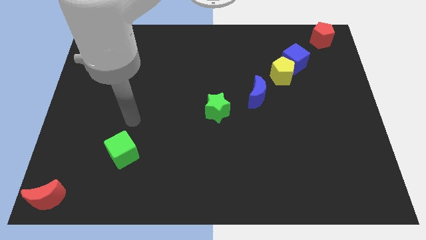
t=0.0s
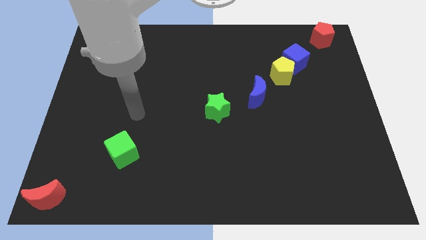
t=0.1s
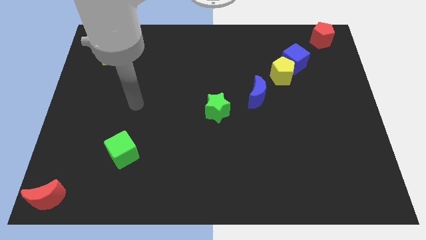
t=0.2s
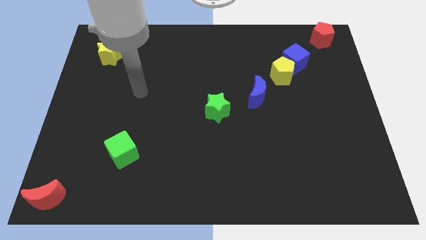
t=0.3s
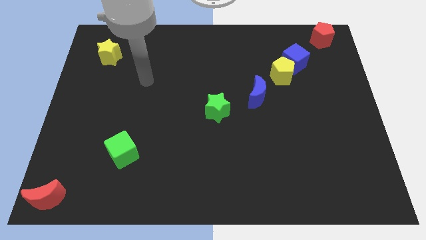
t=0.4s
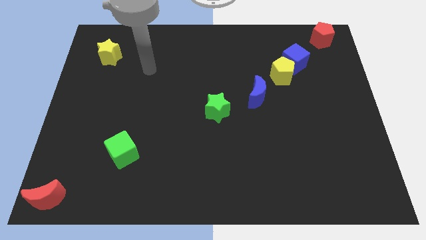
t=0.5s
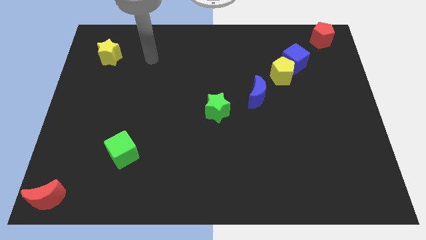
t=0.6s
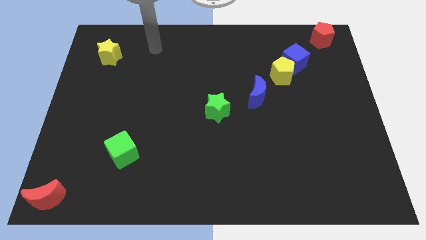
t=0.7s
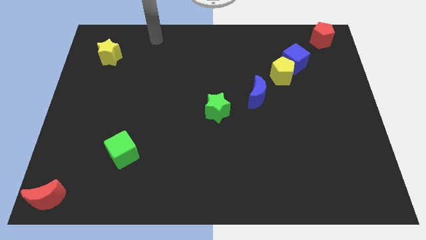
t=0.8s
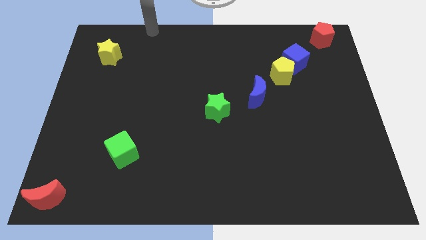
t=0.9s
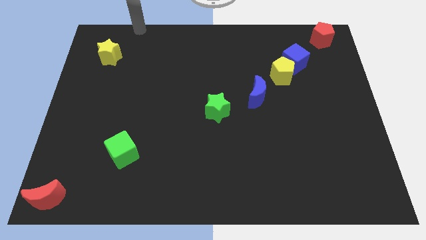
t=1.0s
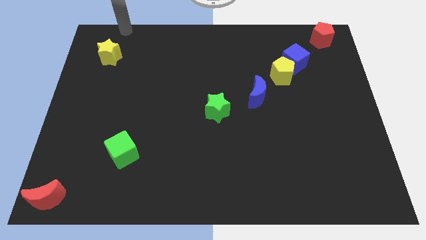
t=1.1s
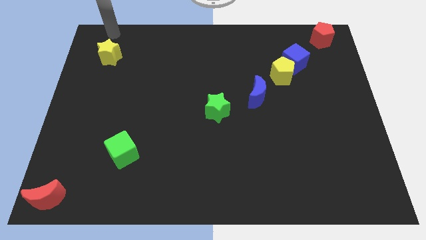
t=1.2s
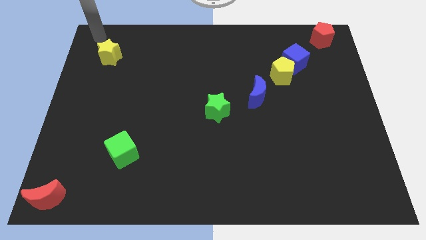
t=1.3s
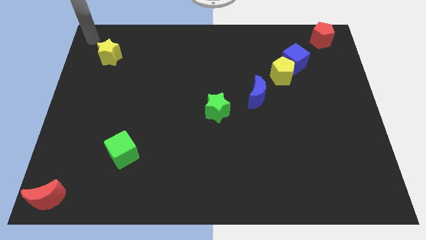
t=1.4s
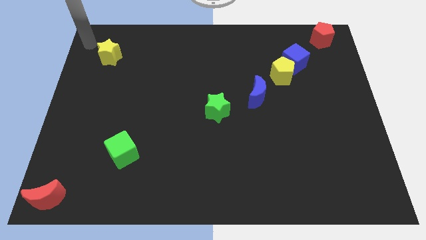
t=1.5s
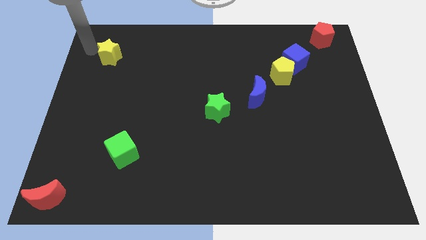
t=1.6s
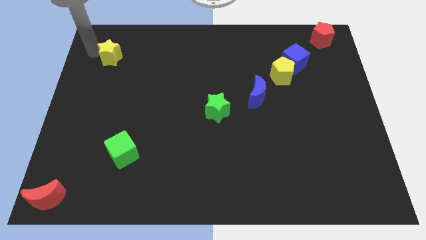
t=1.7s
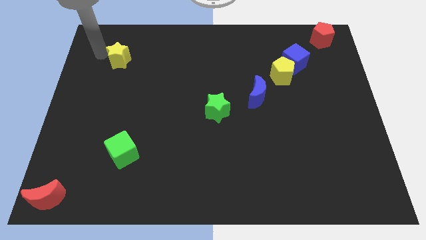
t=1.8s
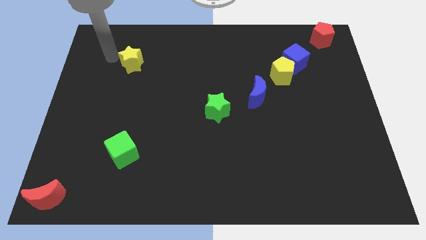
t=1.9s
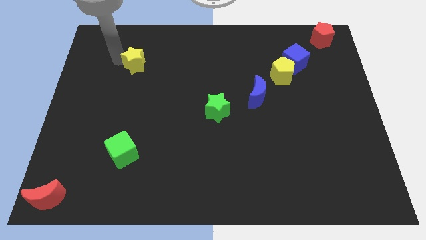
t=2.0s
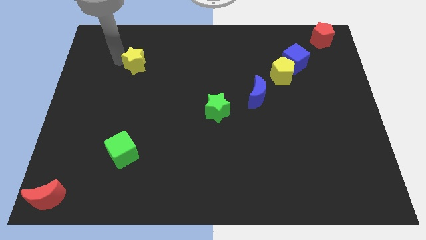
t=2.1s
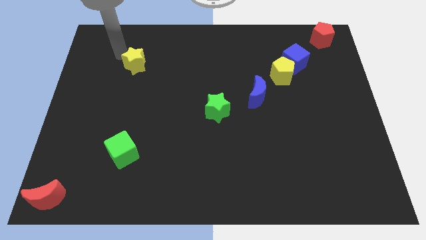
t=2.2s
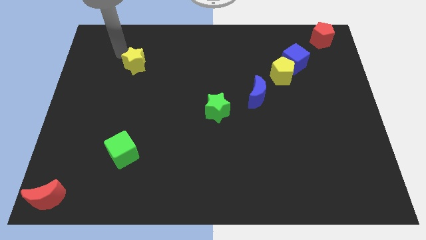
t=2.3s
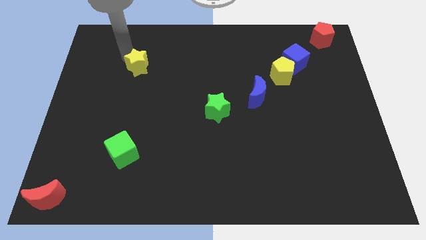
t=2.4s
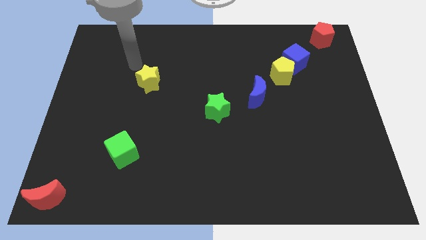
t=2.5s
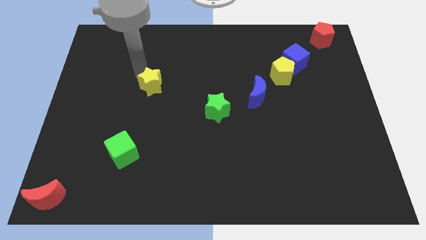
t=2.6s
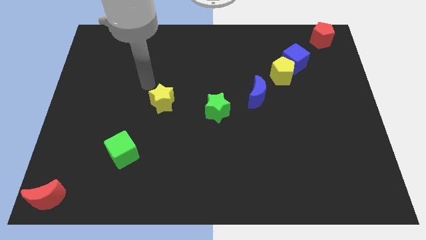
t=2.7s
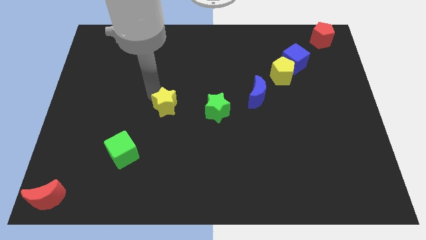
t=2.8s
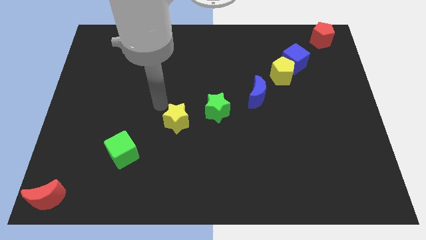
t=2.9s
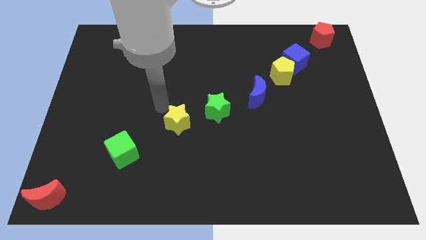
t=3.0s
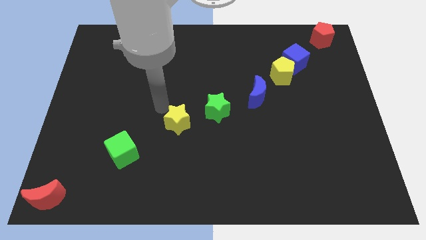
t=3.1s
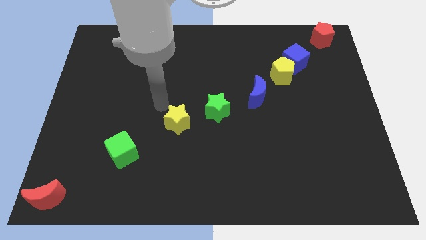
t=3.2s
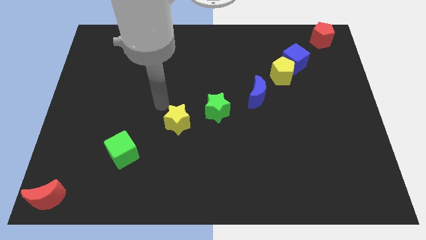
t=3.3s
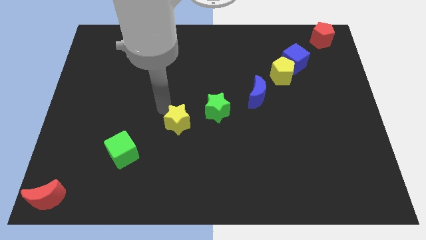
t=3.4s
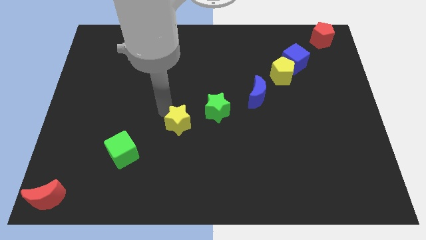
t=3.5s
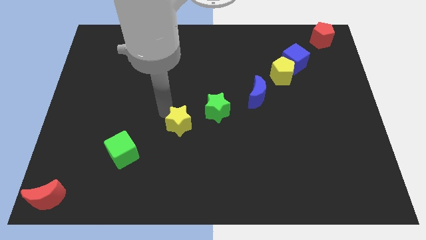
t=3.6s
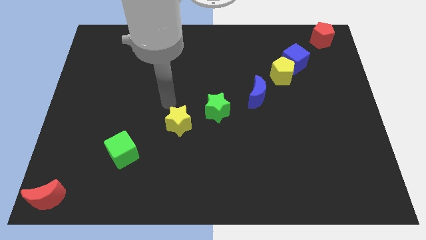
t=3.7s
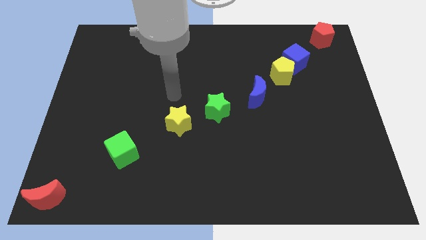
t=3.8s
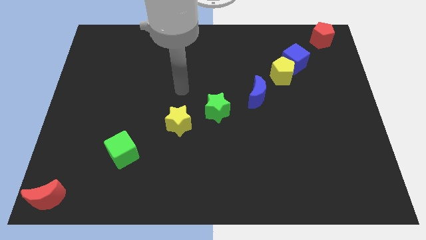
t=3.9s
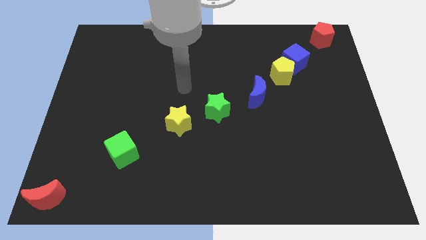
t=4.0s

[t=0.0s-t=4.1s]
push the yellow star parallel to the green star

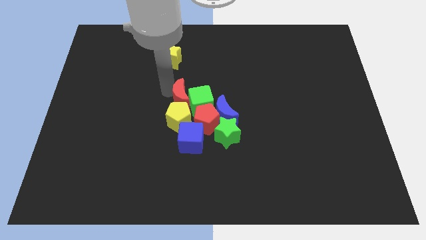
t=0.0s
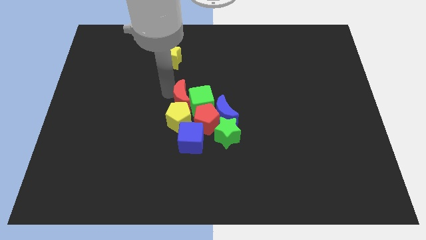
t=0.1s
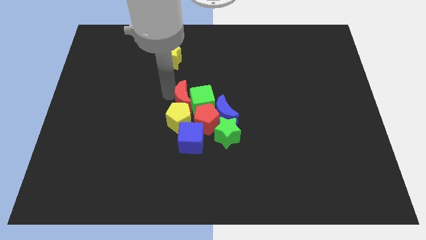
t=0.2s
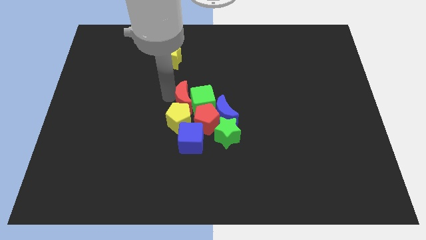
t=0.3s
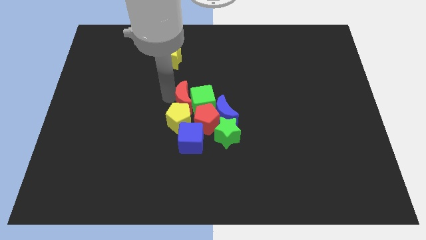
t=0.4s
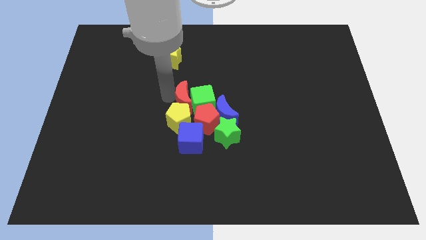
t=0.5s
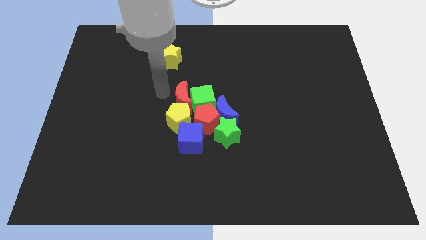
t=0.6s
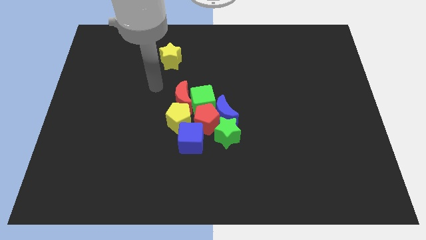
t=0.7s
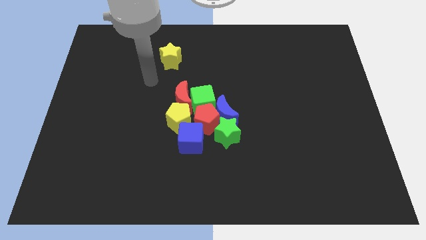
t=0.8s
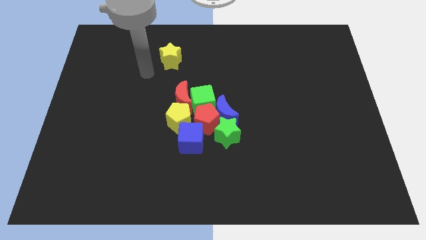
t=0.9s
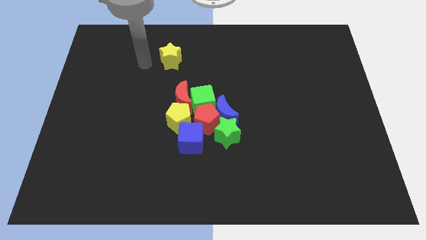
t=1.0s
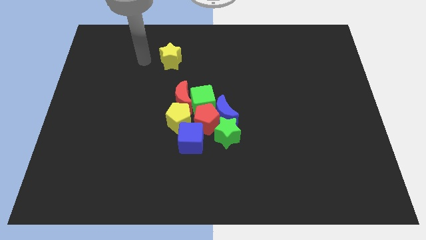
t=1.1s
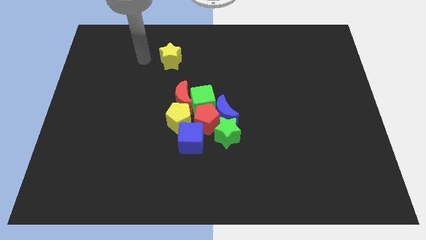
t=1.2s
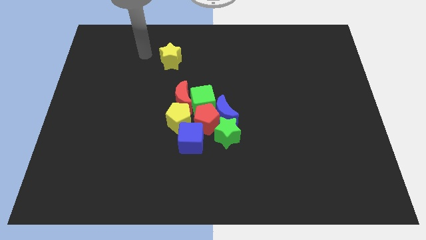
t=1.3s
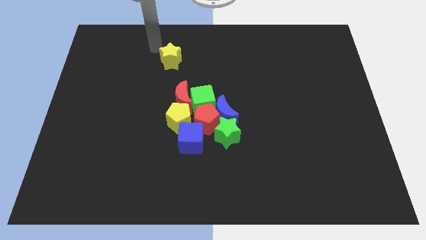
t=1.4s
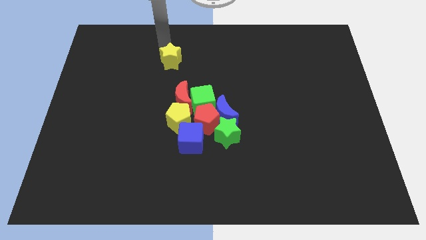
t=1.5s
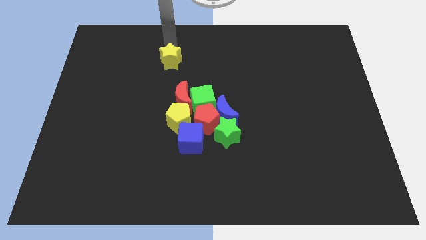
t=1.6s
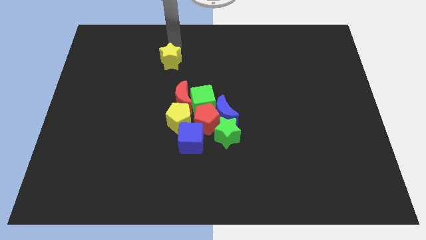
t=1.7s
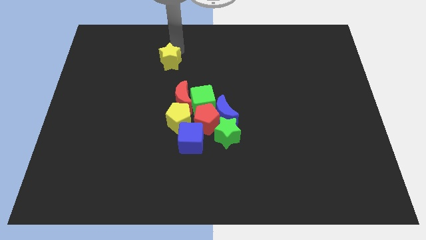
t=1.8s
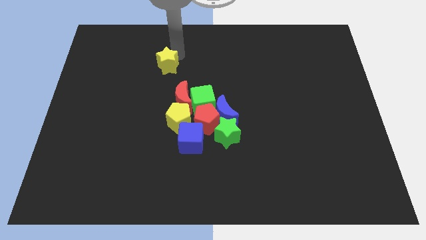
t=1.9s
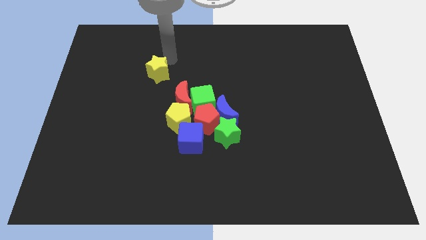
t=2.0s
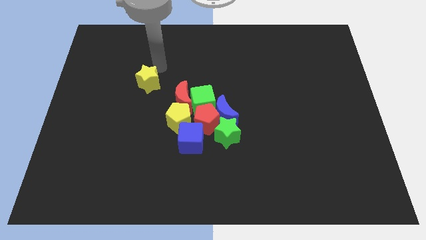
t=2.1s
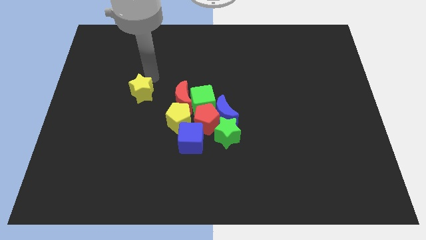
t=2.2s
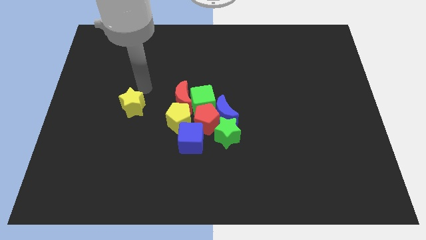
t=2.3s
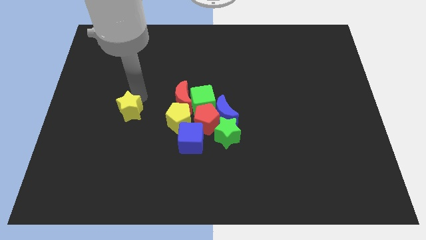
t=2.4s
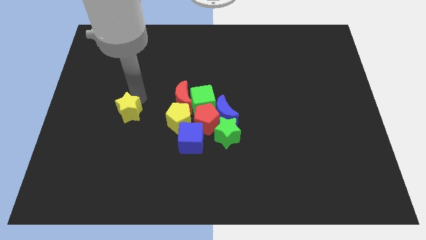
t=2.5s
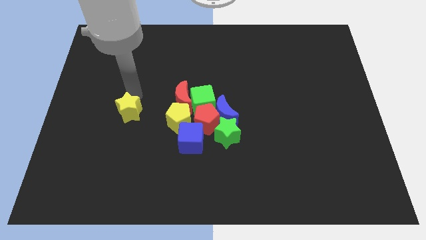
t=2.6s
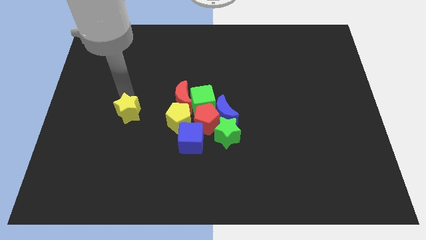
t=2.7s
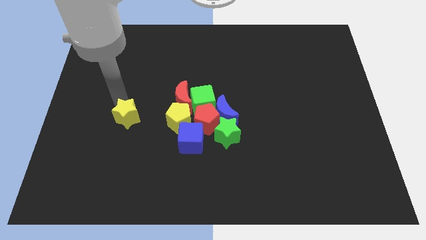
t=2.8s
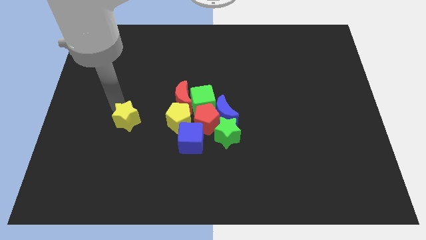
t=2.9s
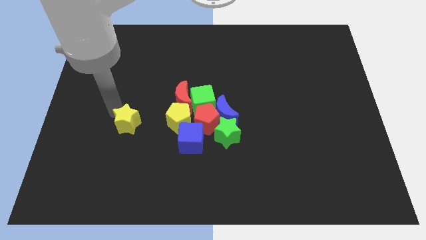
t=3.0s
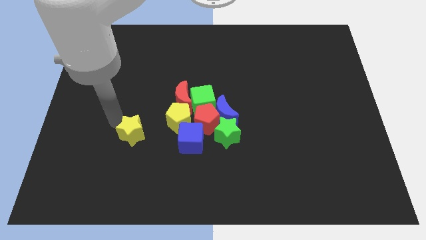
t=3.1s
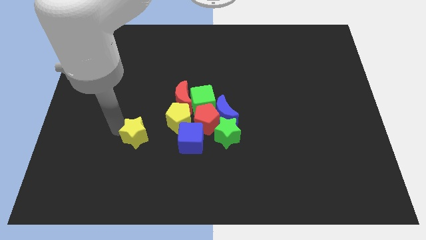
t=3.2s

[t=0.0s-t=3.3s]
slide the yellow star parallel to all the blocks

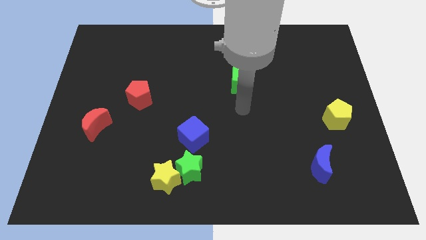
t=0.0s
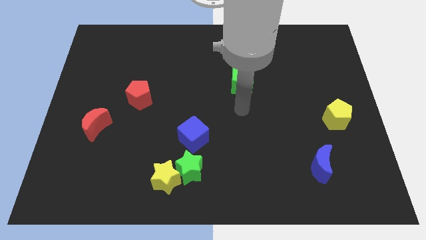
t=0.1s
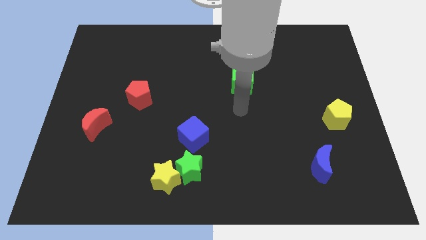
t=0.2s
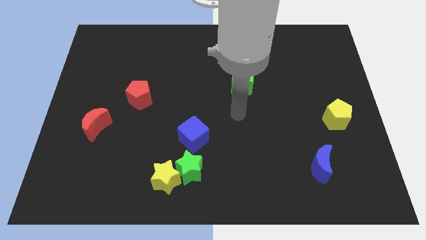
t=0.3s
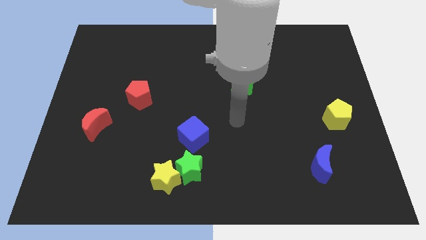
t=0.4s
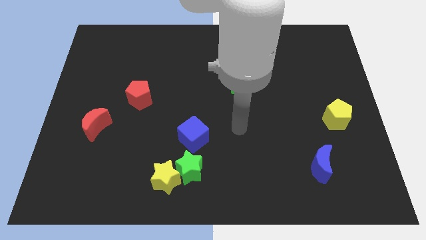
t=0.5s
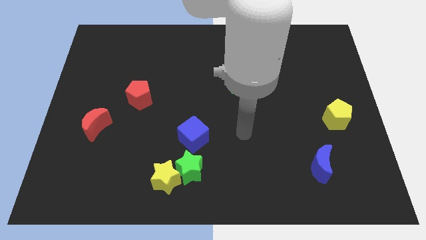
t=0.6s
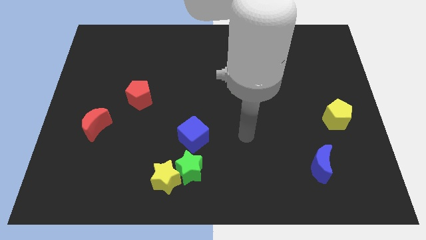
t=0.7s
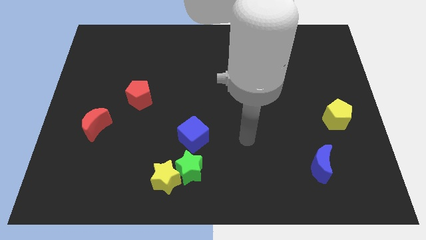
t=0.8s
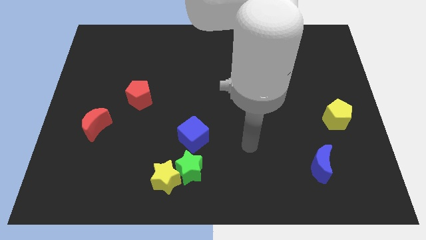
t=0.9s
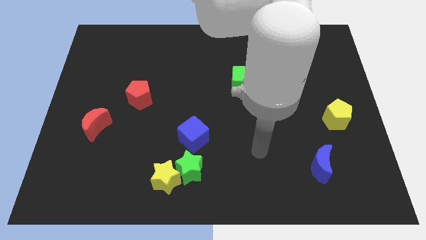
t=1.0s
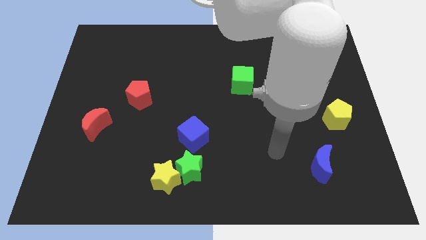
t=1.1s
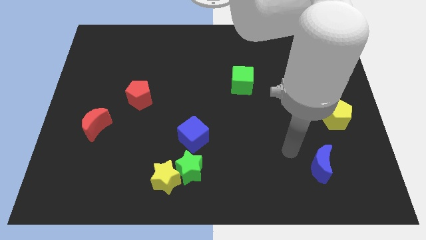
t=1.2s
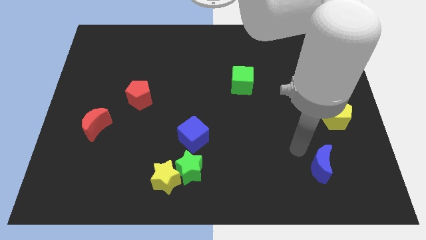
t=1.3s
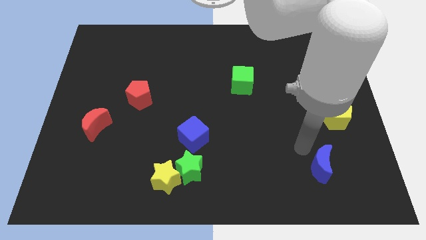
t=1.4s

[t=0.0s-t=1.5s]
point the arm at the top left side of the blue moon

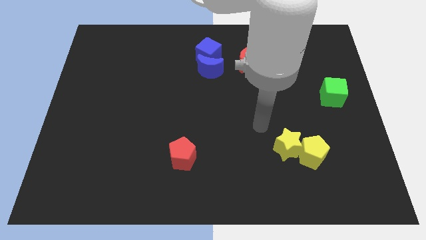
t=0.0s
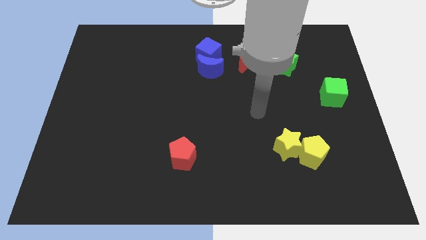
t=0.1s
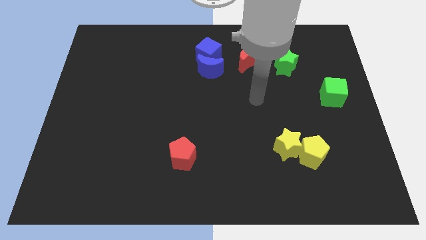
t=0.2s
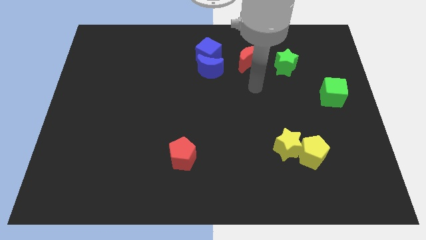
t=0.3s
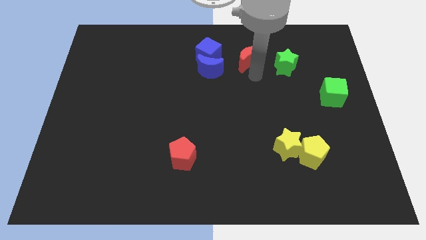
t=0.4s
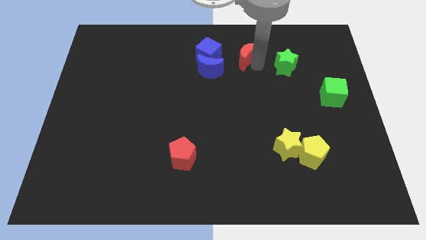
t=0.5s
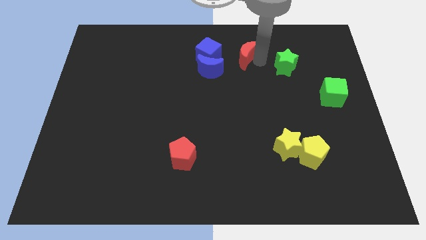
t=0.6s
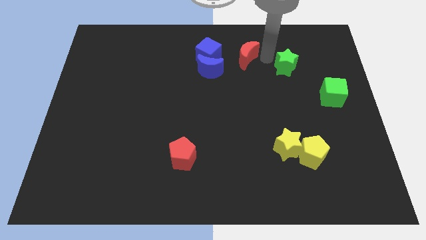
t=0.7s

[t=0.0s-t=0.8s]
move the red crescent slightly to the left
